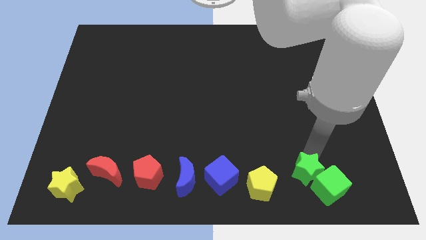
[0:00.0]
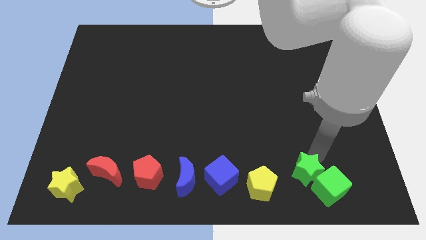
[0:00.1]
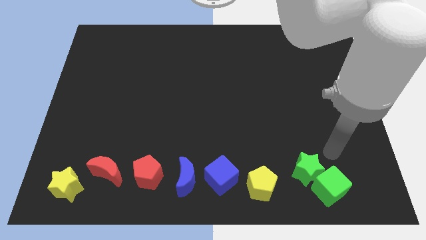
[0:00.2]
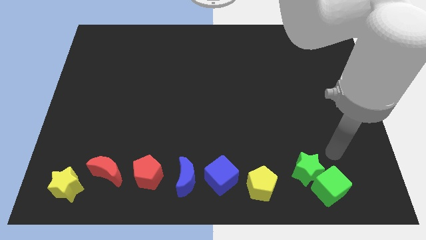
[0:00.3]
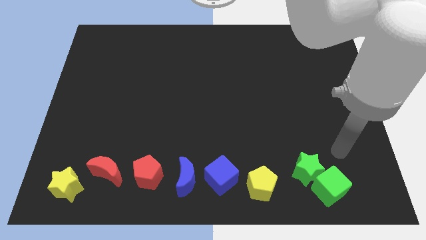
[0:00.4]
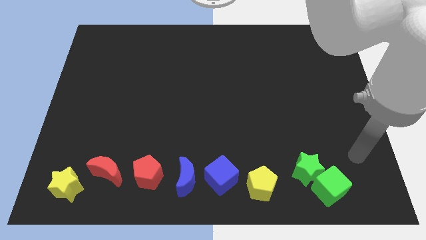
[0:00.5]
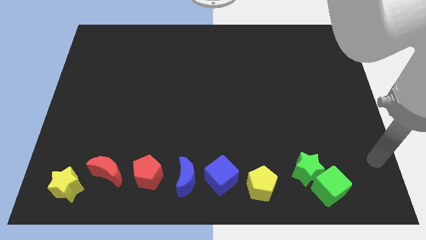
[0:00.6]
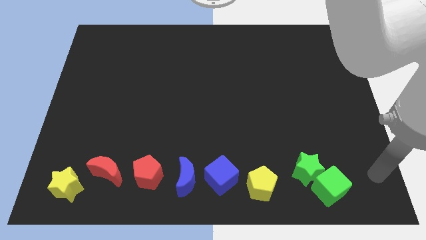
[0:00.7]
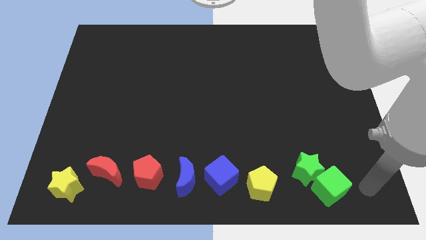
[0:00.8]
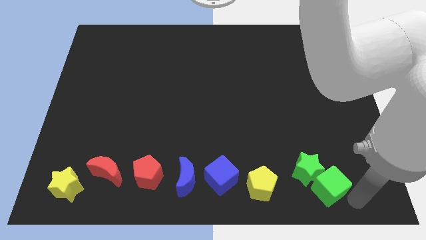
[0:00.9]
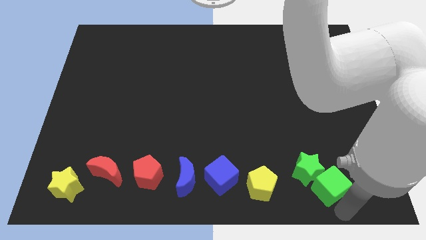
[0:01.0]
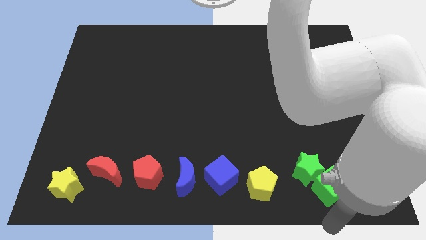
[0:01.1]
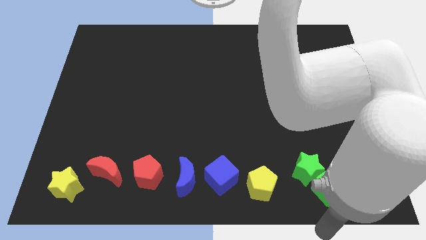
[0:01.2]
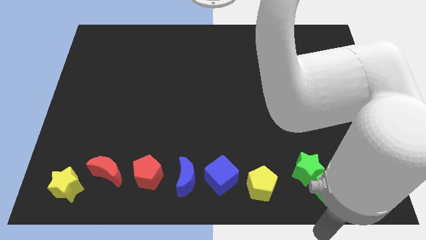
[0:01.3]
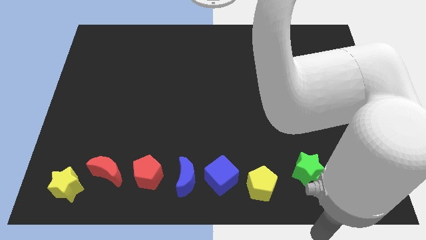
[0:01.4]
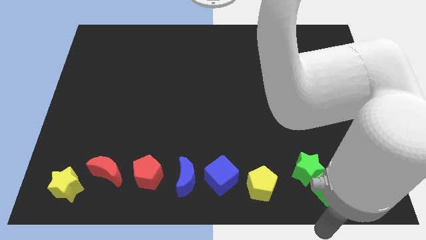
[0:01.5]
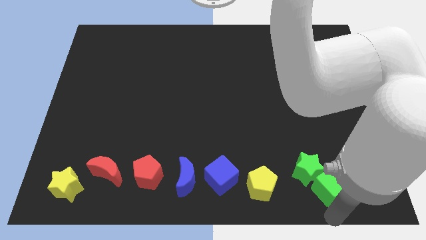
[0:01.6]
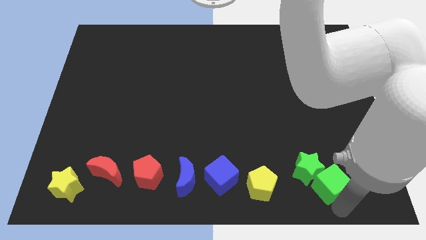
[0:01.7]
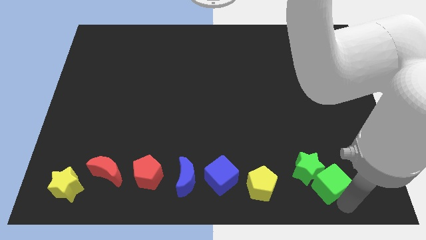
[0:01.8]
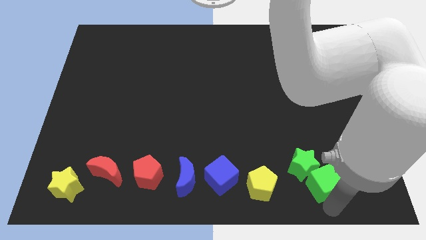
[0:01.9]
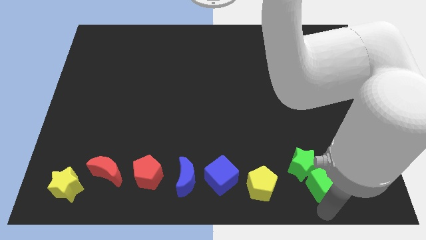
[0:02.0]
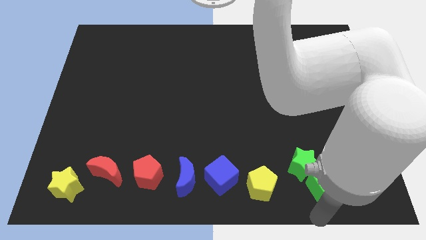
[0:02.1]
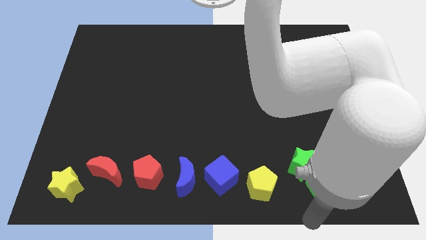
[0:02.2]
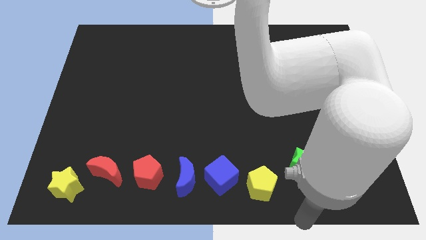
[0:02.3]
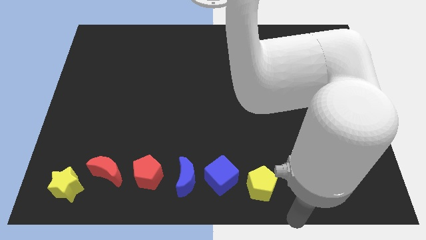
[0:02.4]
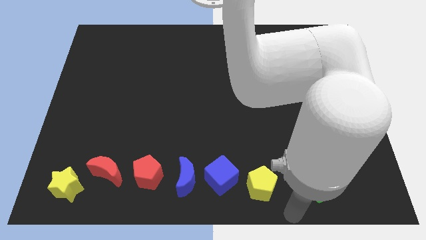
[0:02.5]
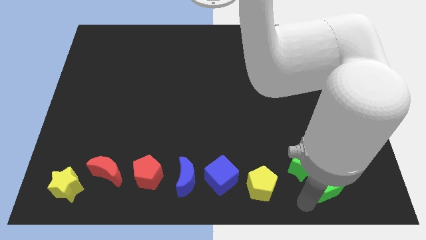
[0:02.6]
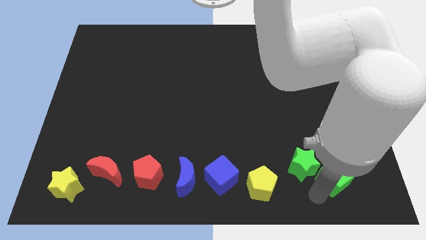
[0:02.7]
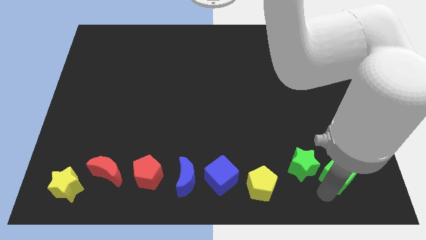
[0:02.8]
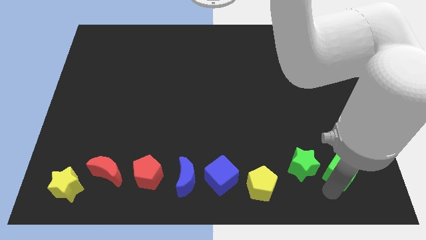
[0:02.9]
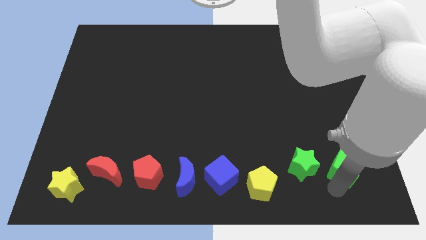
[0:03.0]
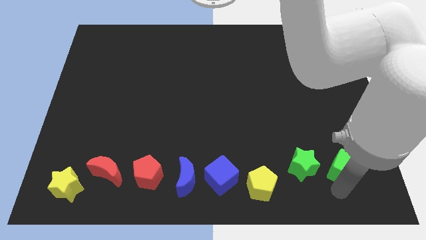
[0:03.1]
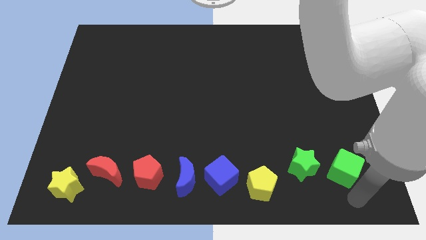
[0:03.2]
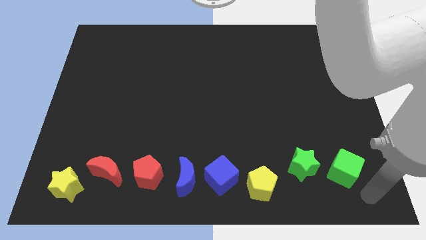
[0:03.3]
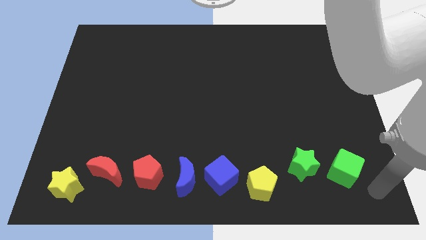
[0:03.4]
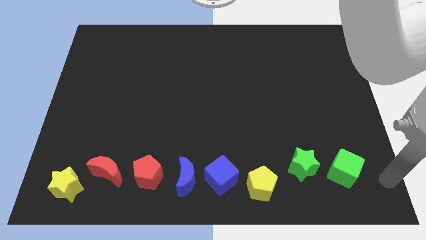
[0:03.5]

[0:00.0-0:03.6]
move the green cube to the right of the green star

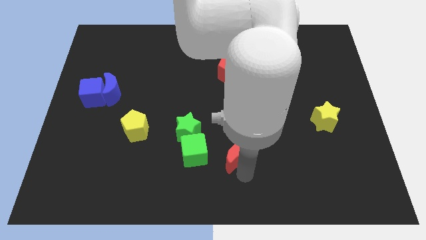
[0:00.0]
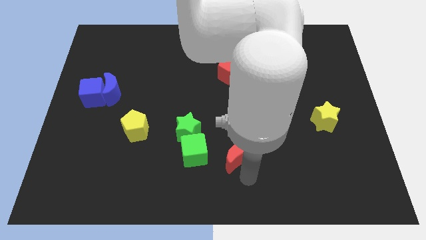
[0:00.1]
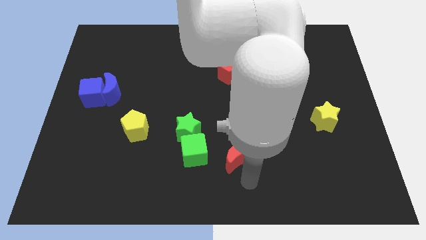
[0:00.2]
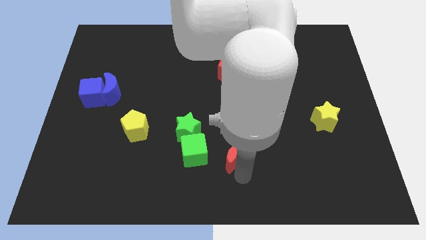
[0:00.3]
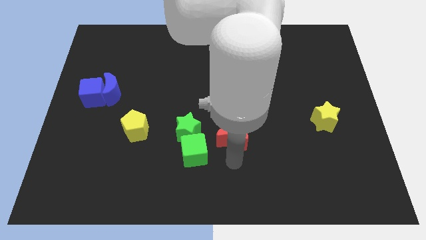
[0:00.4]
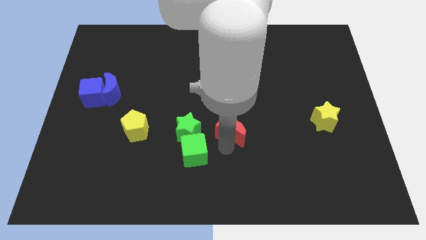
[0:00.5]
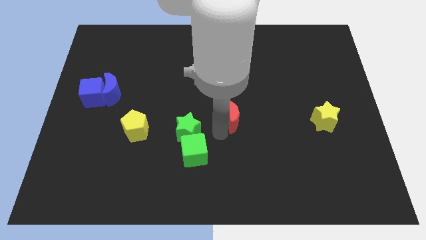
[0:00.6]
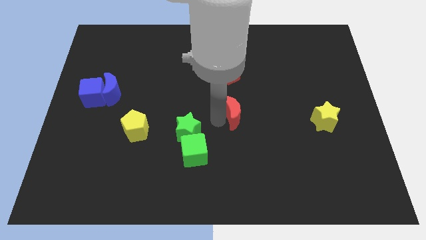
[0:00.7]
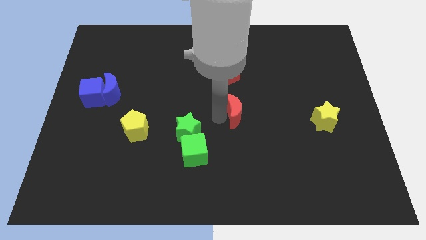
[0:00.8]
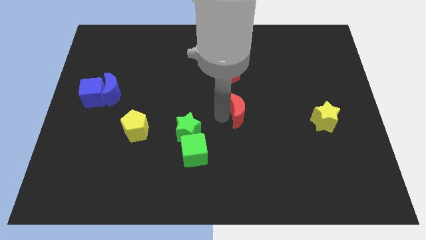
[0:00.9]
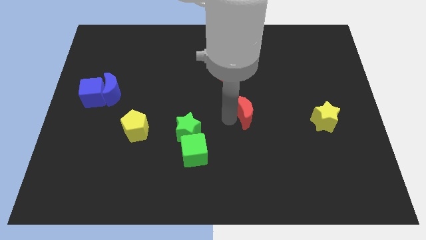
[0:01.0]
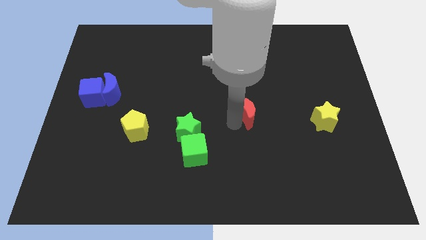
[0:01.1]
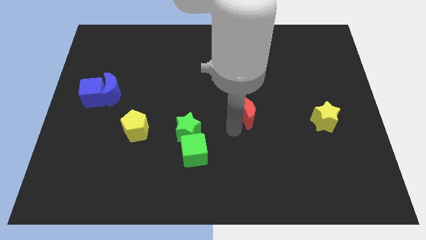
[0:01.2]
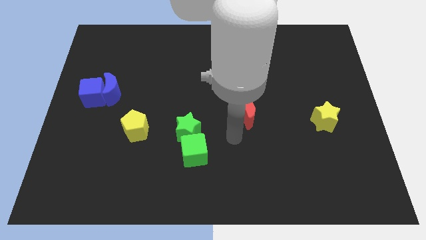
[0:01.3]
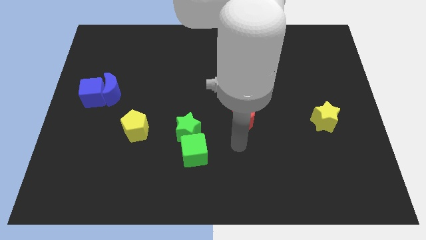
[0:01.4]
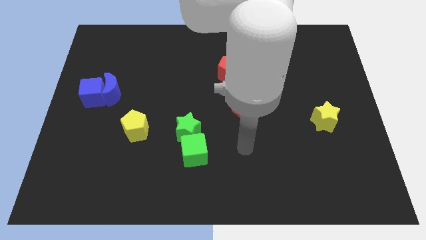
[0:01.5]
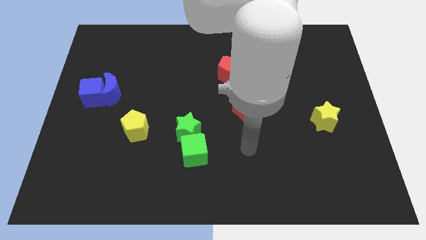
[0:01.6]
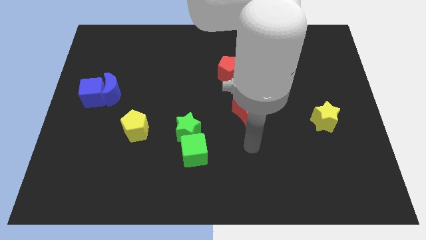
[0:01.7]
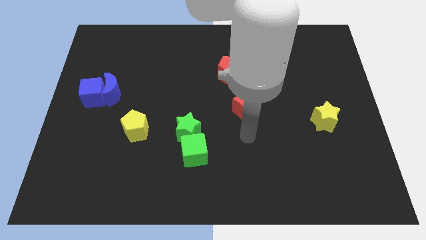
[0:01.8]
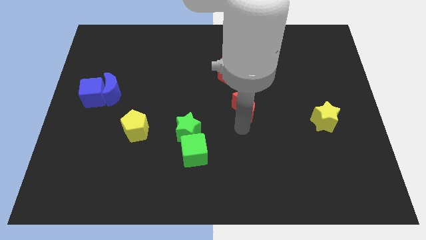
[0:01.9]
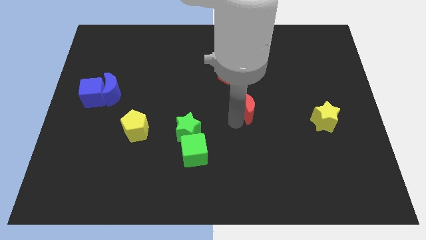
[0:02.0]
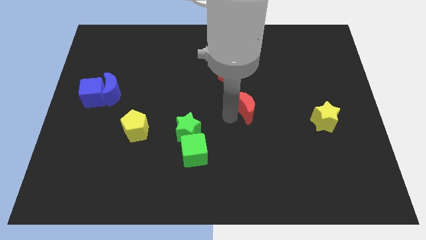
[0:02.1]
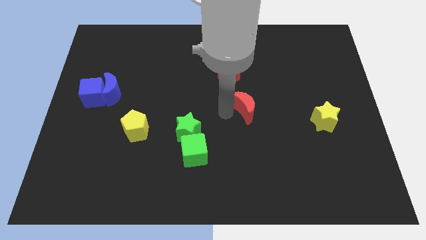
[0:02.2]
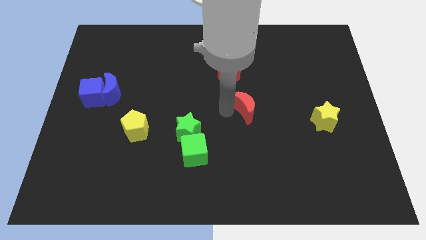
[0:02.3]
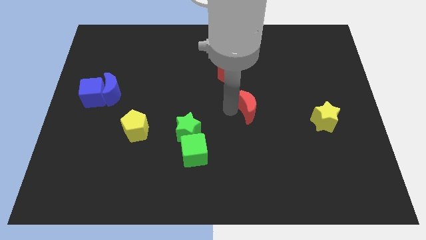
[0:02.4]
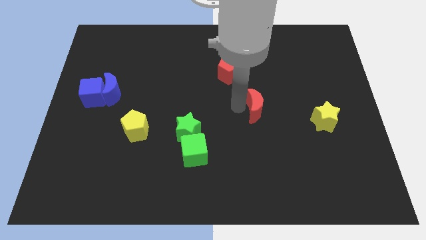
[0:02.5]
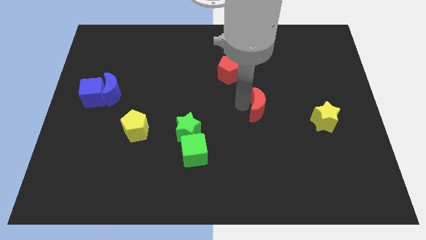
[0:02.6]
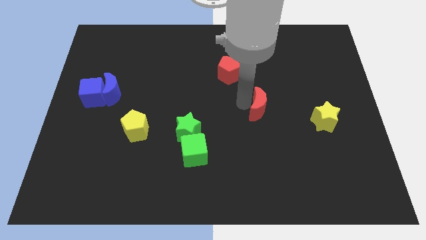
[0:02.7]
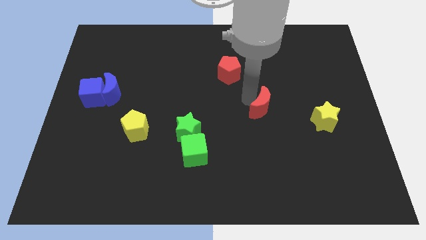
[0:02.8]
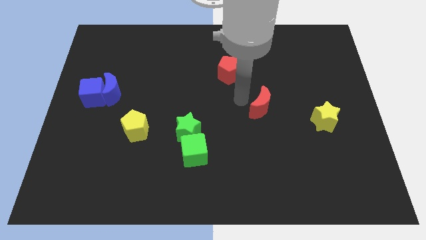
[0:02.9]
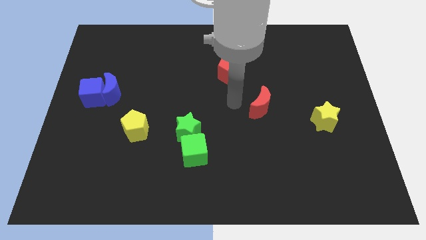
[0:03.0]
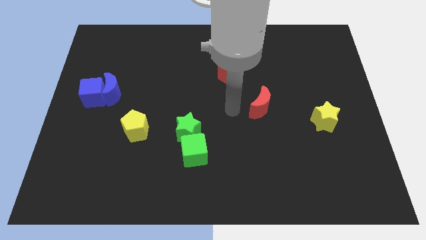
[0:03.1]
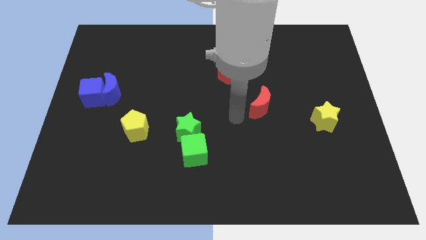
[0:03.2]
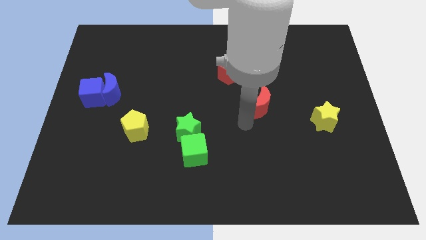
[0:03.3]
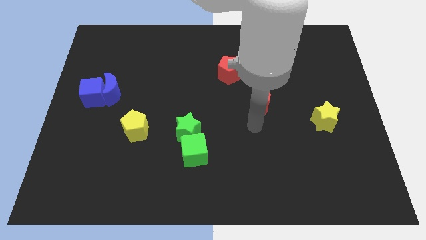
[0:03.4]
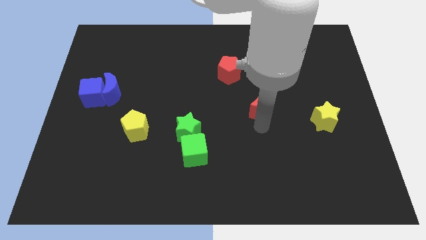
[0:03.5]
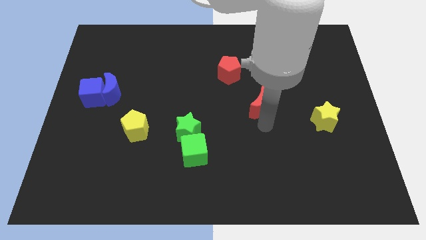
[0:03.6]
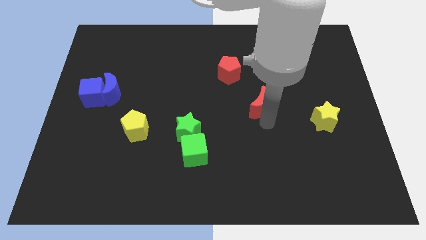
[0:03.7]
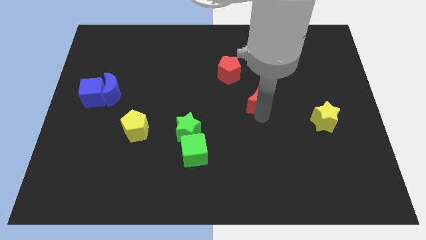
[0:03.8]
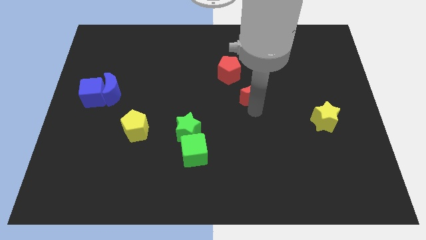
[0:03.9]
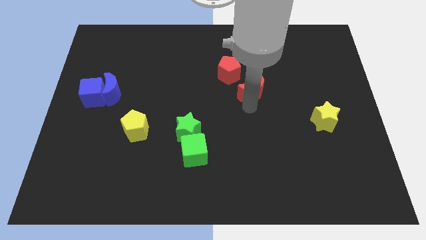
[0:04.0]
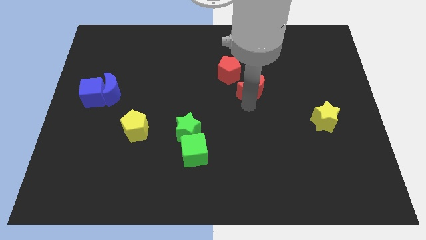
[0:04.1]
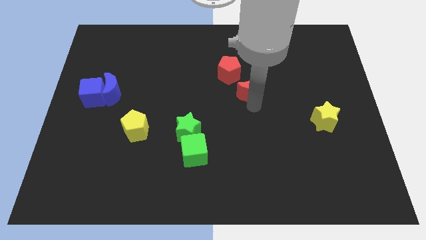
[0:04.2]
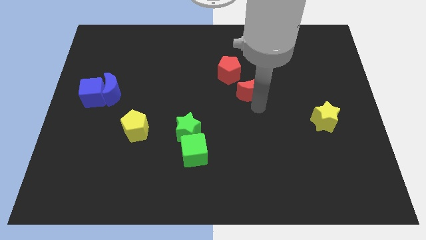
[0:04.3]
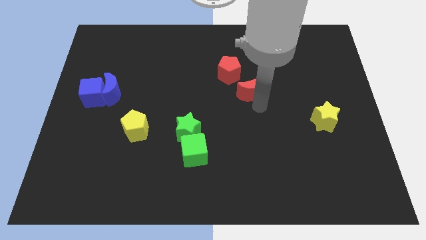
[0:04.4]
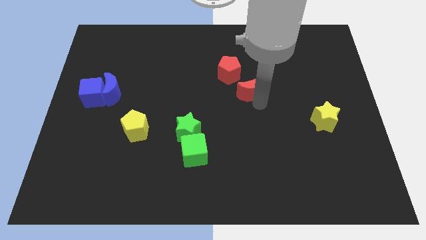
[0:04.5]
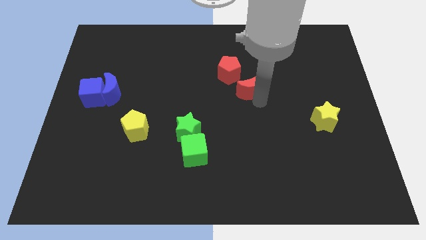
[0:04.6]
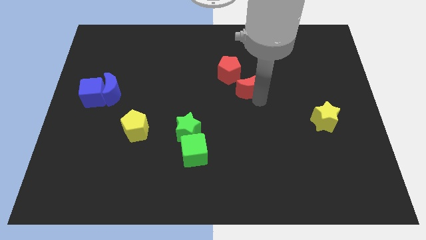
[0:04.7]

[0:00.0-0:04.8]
move the red moon close to the red pentagon

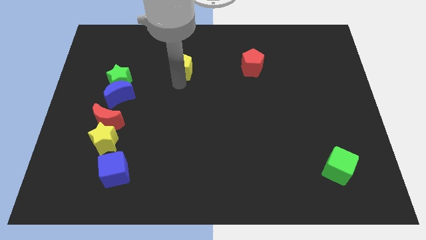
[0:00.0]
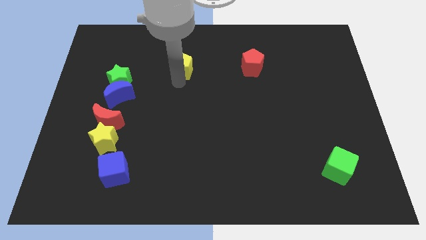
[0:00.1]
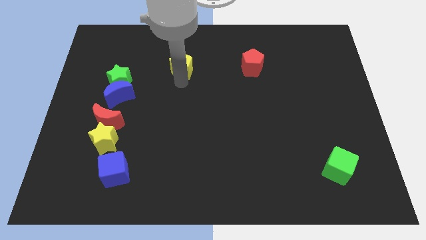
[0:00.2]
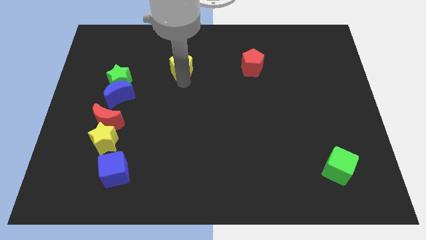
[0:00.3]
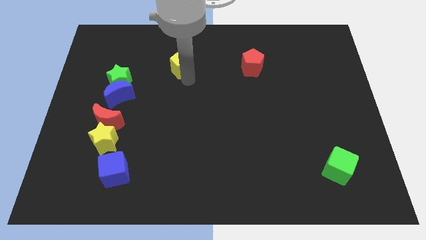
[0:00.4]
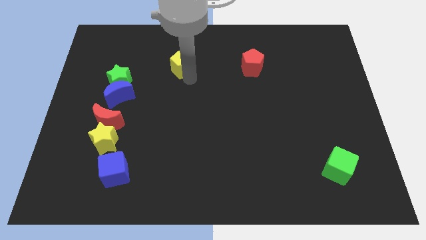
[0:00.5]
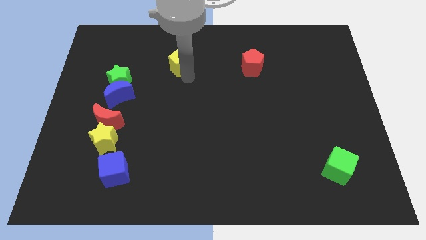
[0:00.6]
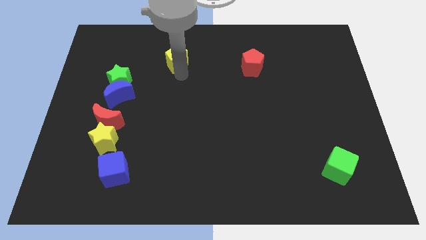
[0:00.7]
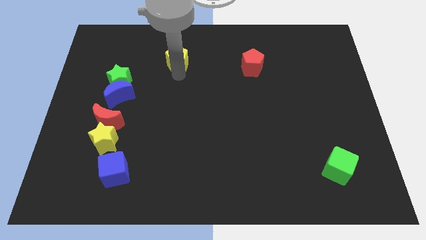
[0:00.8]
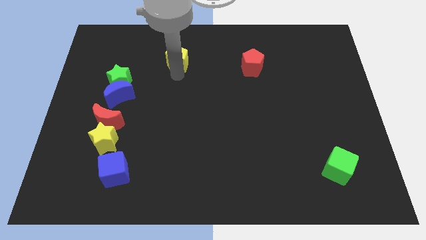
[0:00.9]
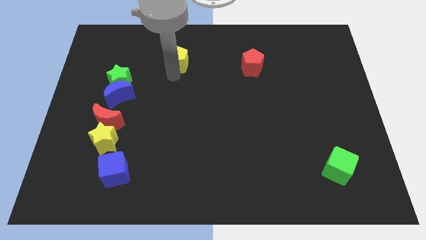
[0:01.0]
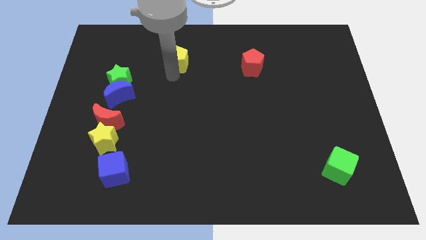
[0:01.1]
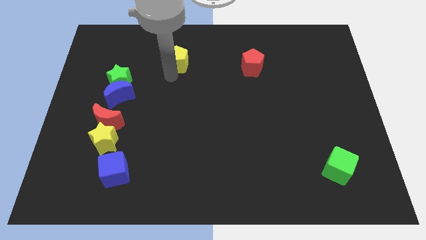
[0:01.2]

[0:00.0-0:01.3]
push the yellow pentagon slightly to the top side of the board
